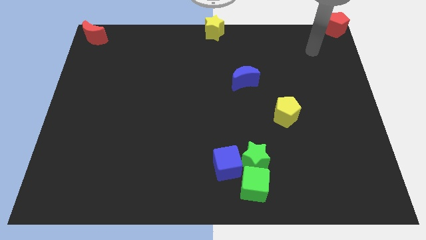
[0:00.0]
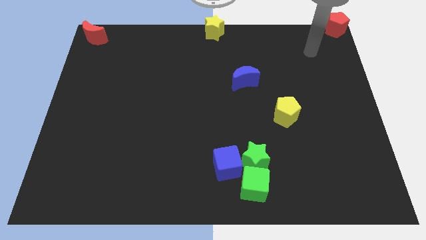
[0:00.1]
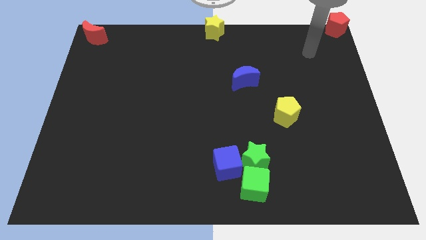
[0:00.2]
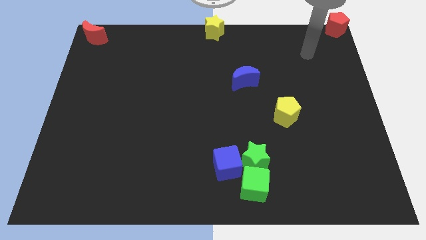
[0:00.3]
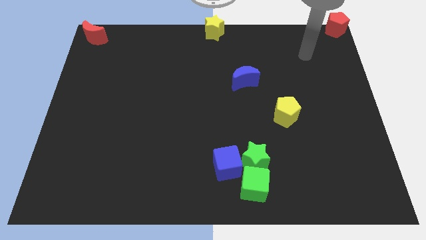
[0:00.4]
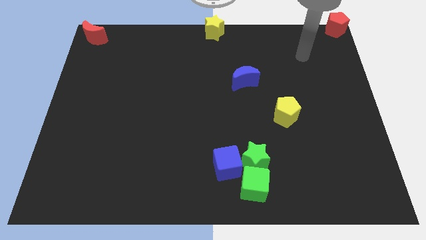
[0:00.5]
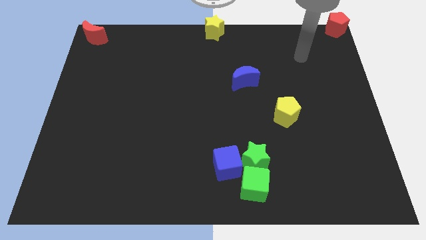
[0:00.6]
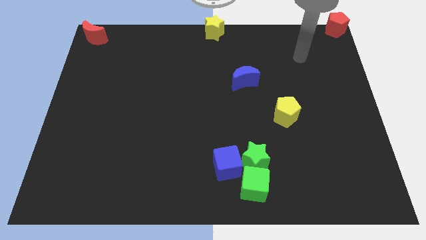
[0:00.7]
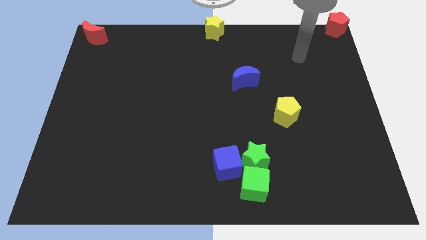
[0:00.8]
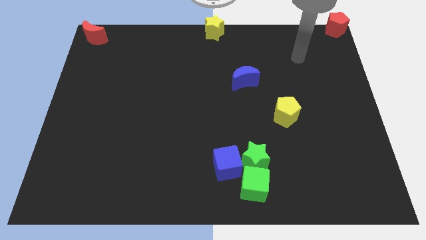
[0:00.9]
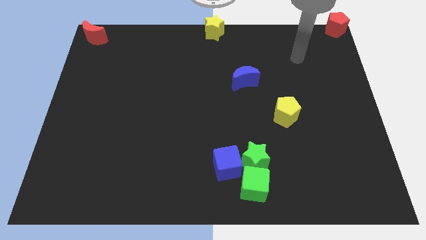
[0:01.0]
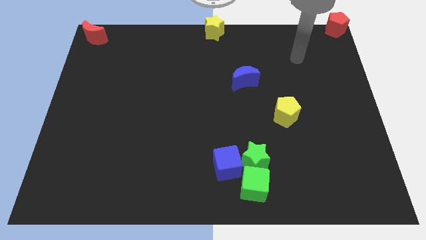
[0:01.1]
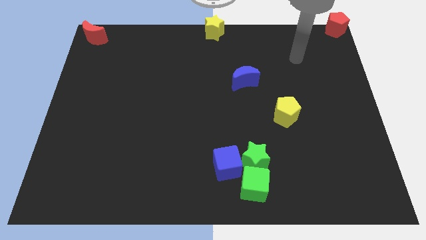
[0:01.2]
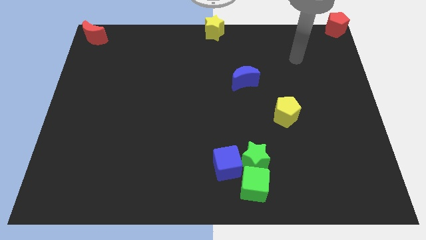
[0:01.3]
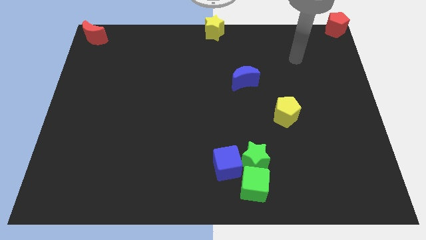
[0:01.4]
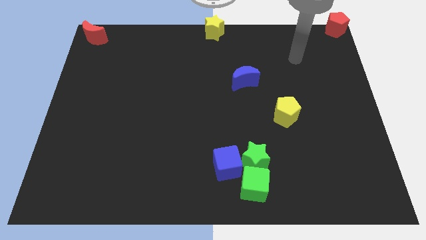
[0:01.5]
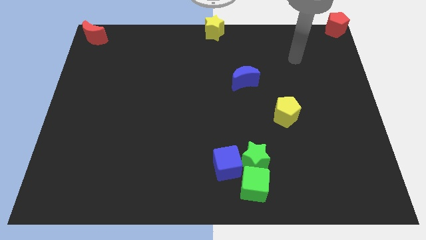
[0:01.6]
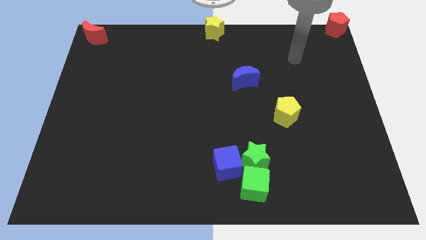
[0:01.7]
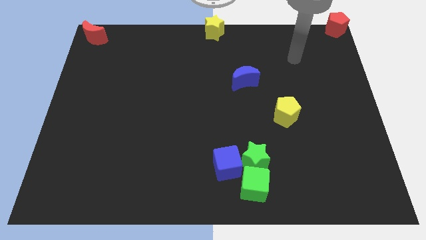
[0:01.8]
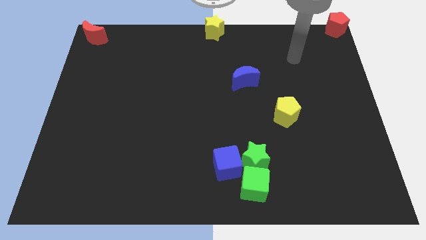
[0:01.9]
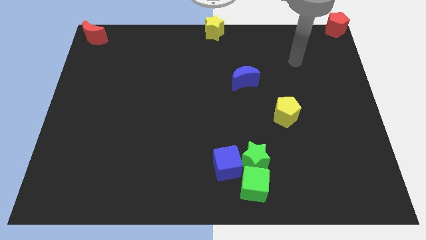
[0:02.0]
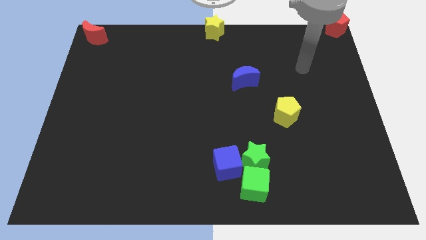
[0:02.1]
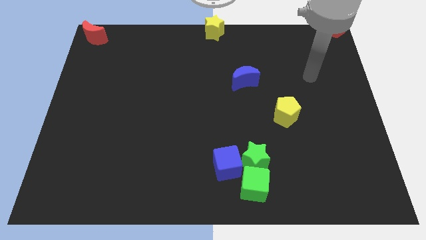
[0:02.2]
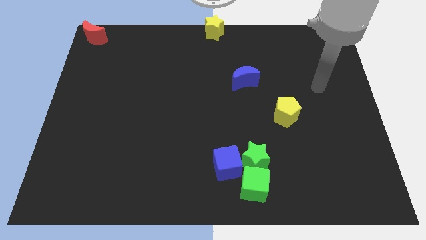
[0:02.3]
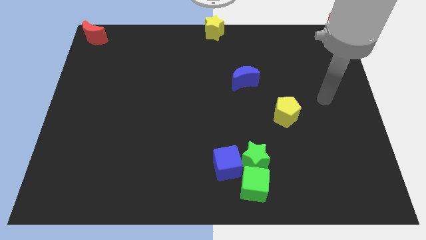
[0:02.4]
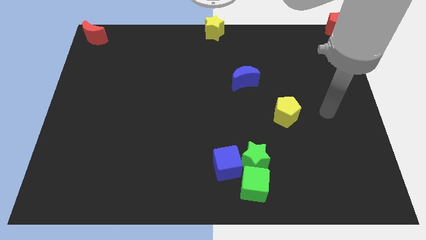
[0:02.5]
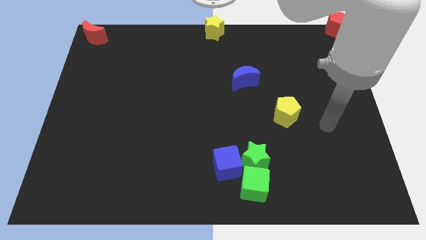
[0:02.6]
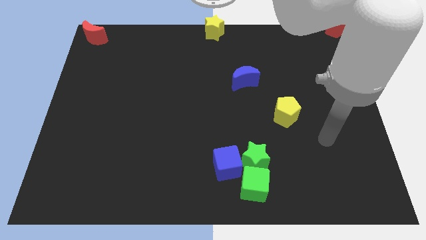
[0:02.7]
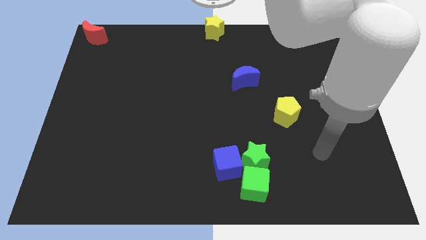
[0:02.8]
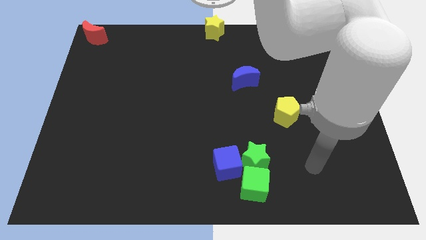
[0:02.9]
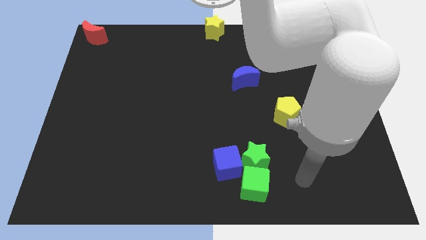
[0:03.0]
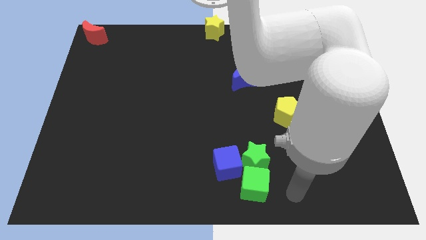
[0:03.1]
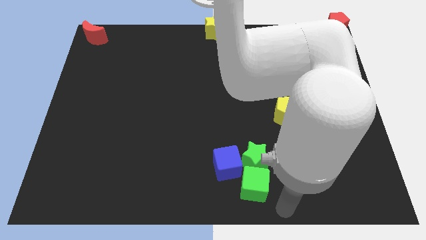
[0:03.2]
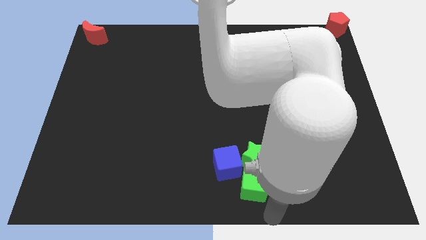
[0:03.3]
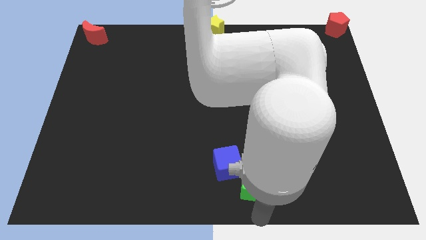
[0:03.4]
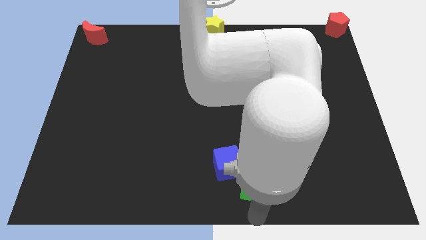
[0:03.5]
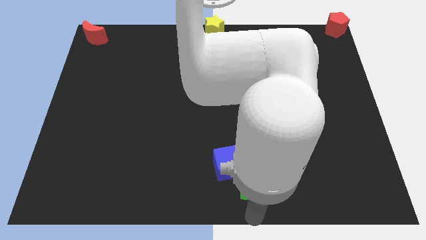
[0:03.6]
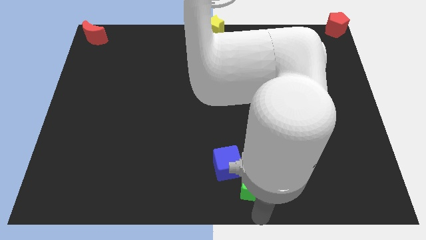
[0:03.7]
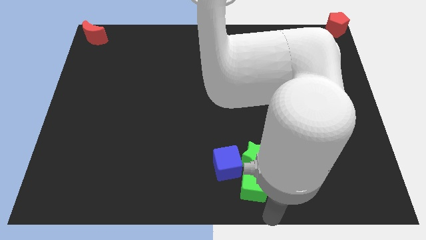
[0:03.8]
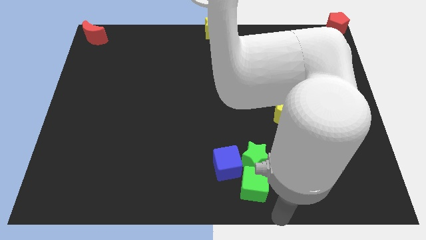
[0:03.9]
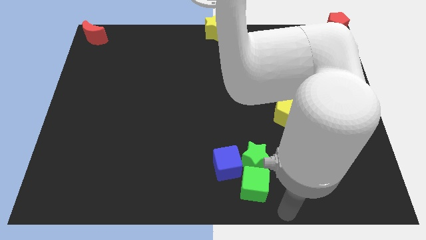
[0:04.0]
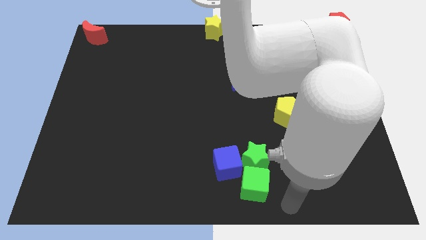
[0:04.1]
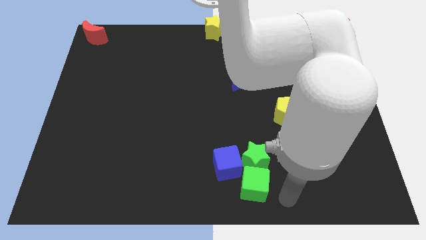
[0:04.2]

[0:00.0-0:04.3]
move the arm right to the green cube

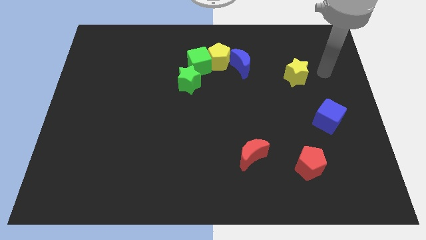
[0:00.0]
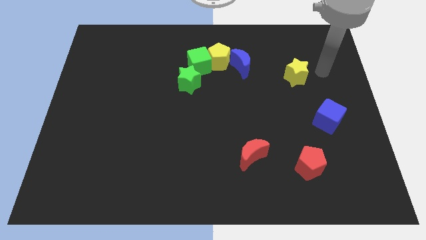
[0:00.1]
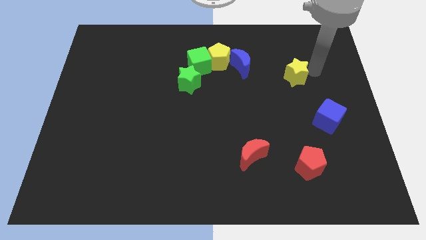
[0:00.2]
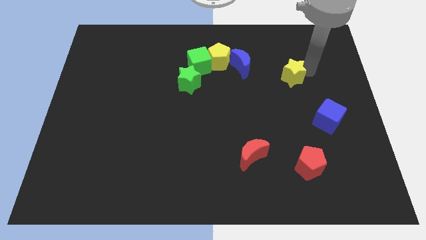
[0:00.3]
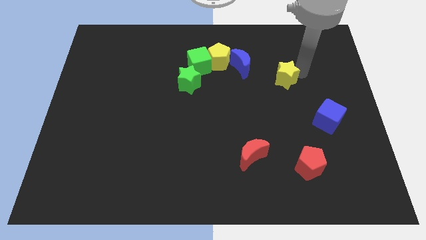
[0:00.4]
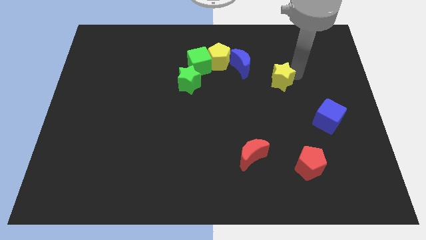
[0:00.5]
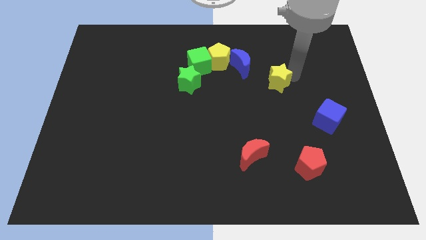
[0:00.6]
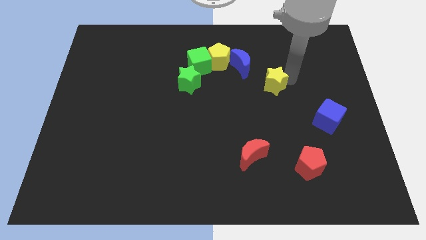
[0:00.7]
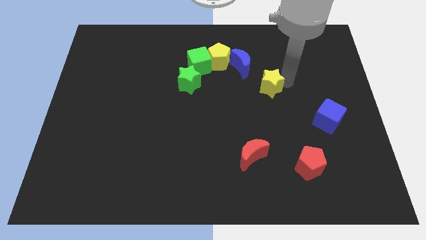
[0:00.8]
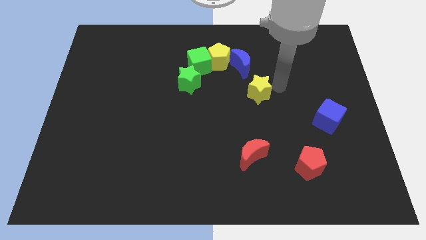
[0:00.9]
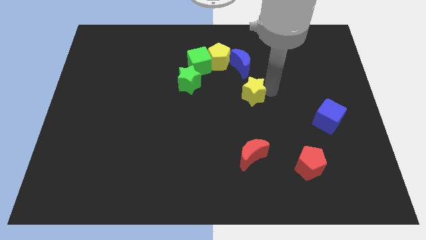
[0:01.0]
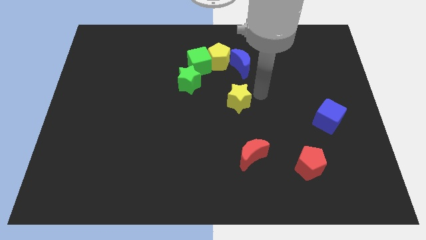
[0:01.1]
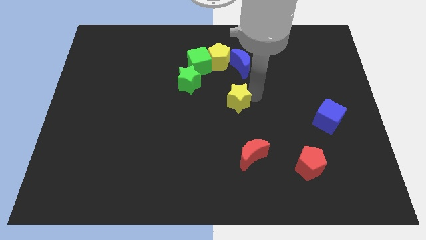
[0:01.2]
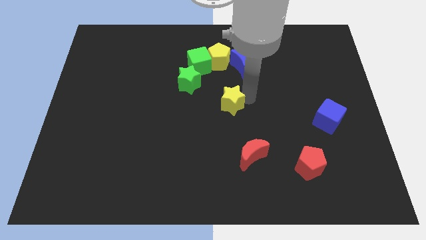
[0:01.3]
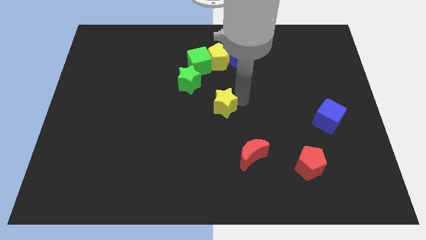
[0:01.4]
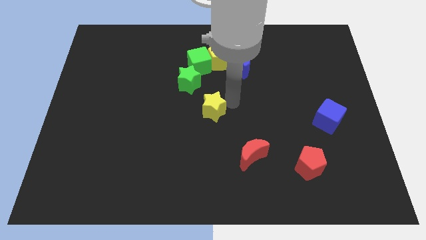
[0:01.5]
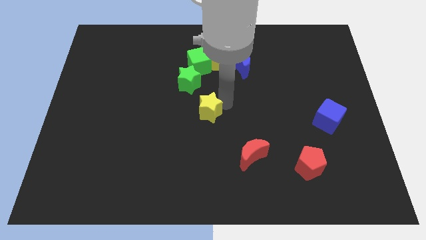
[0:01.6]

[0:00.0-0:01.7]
push the yellow star to the bottom right of the green star

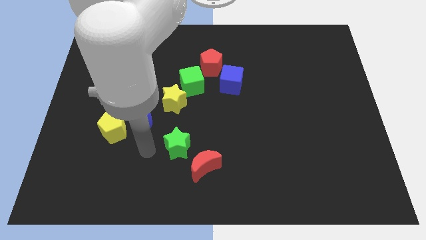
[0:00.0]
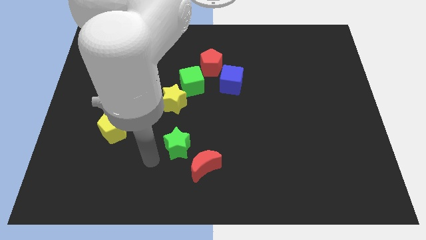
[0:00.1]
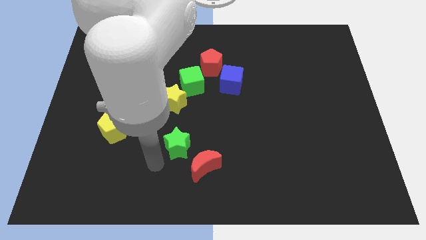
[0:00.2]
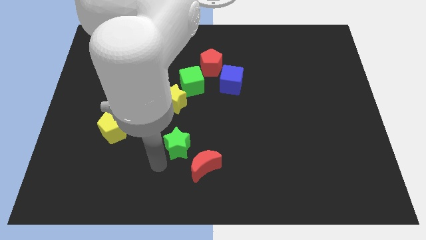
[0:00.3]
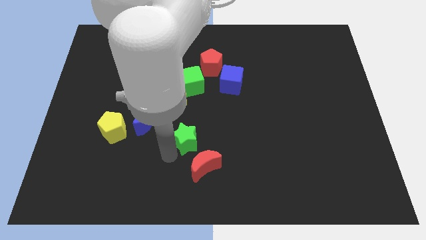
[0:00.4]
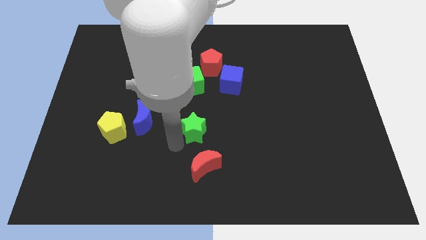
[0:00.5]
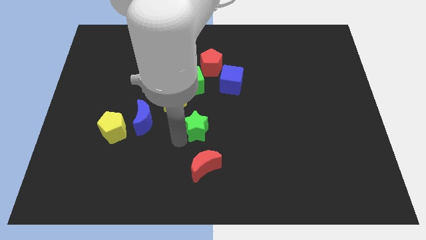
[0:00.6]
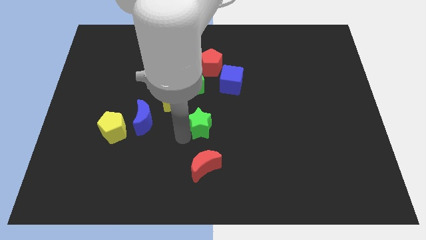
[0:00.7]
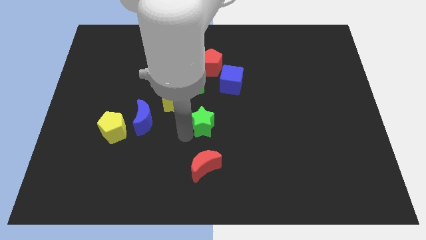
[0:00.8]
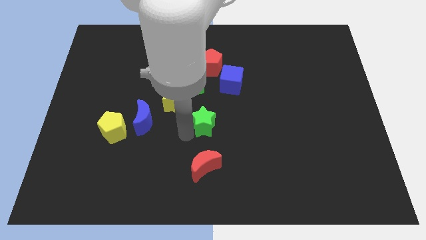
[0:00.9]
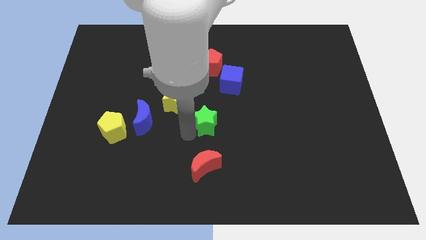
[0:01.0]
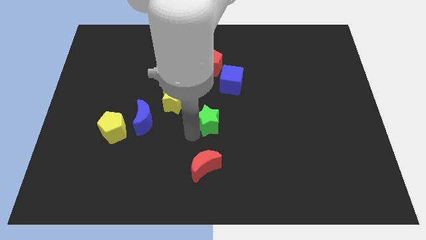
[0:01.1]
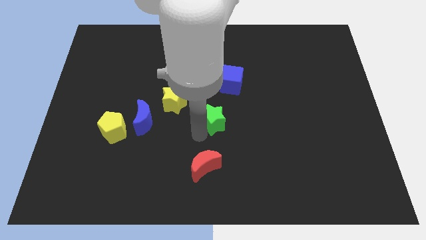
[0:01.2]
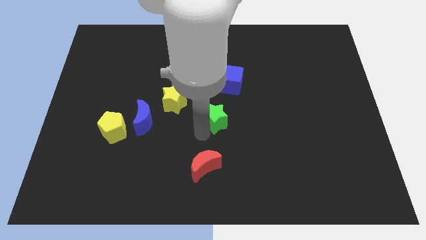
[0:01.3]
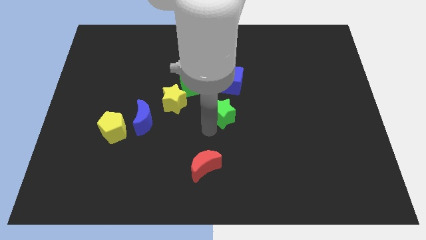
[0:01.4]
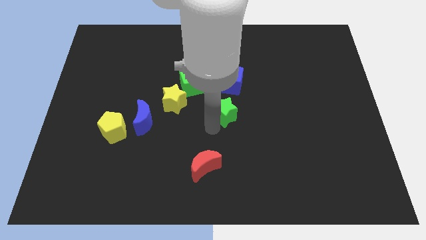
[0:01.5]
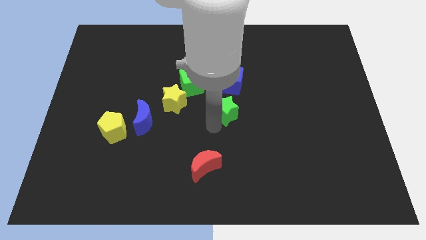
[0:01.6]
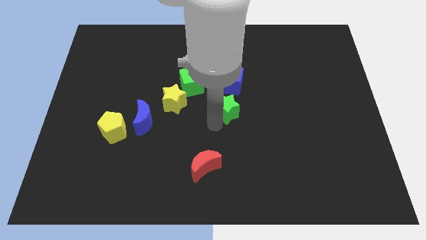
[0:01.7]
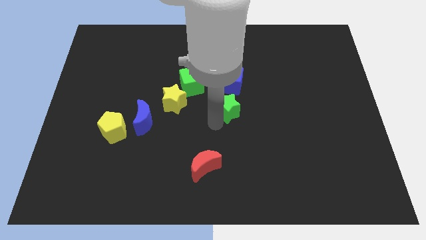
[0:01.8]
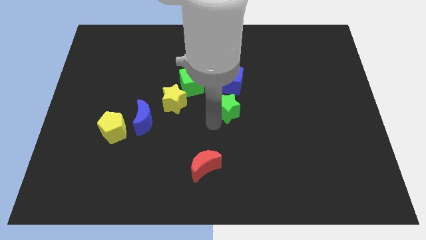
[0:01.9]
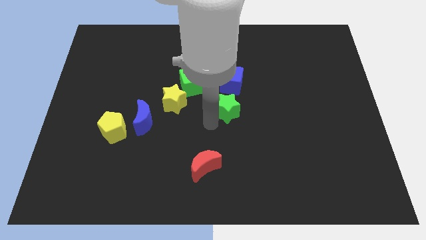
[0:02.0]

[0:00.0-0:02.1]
put the green star underneath the blue cube

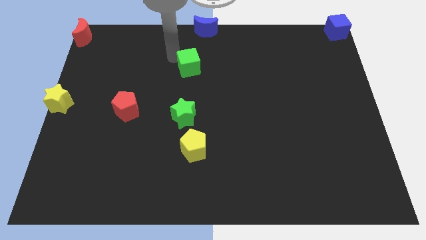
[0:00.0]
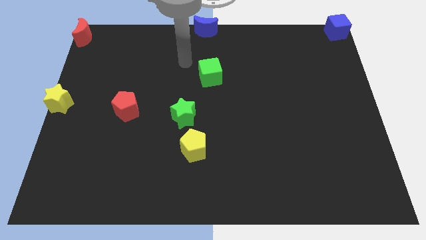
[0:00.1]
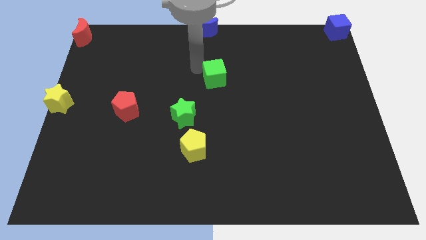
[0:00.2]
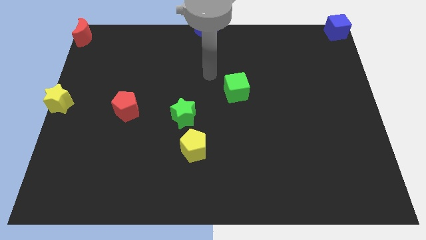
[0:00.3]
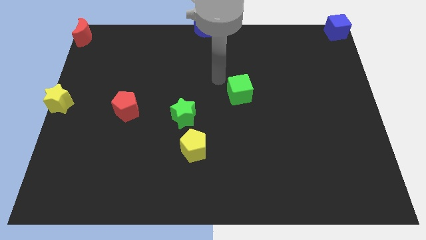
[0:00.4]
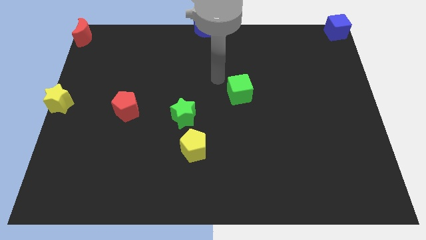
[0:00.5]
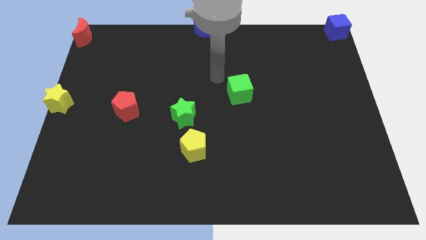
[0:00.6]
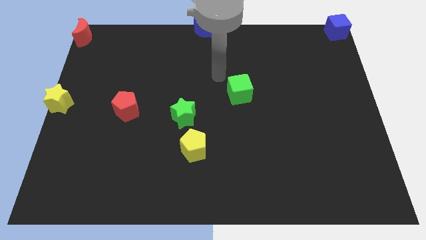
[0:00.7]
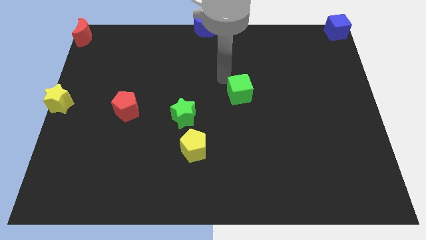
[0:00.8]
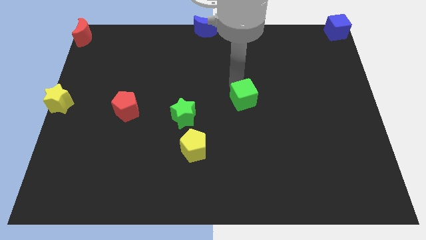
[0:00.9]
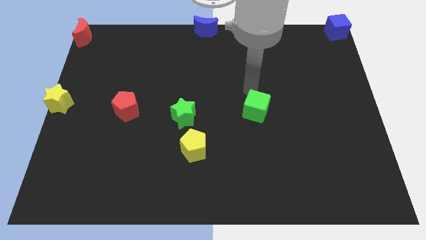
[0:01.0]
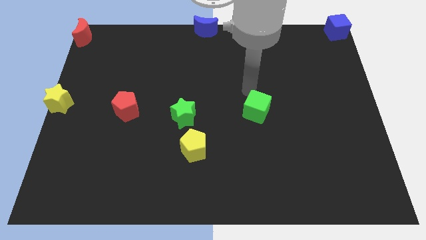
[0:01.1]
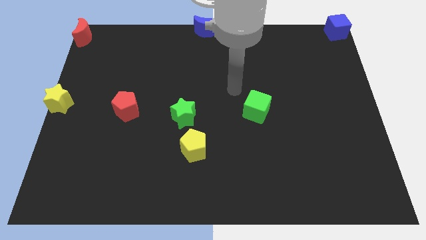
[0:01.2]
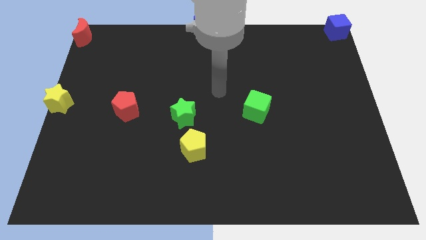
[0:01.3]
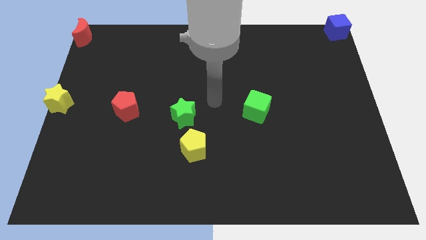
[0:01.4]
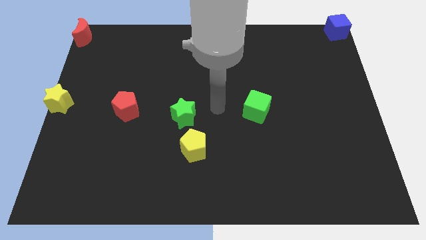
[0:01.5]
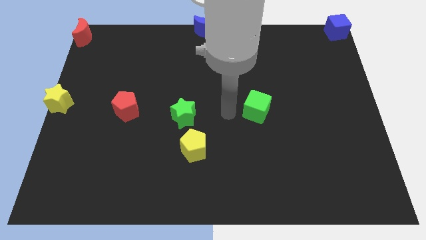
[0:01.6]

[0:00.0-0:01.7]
place the green cube right to the green star
